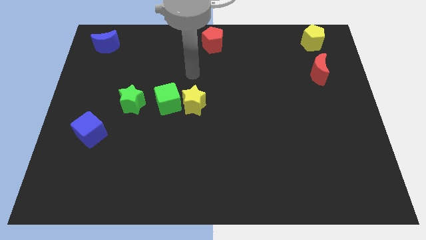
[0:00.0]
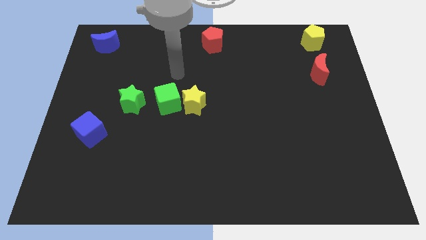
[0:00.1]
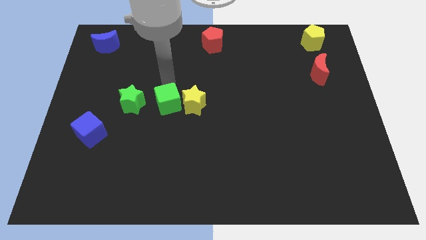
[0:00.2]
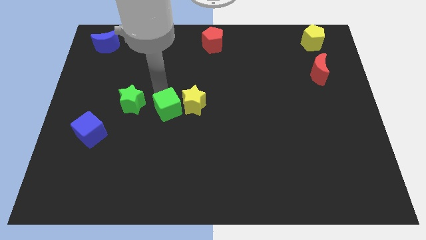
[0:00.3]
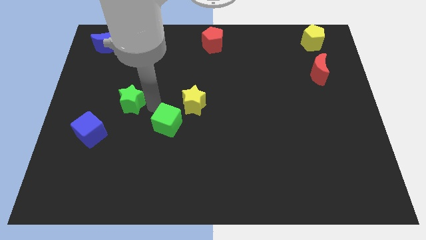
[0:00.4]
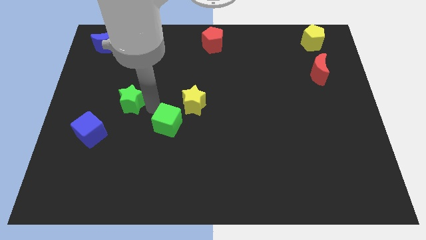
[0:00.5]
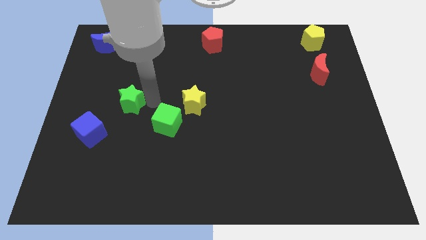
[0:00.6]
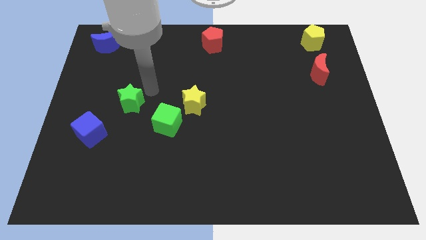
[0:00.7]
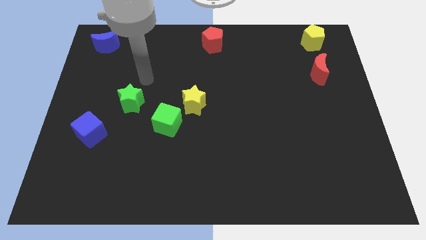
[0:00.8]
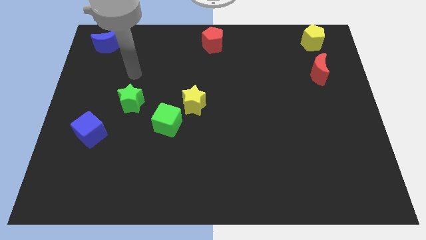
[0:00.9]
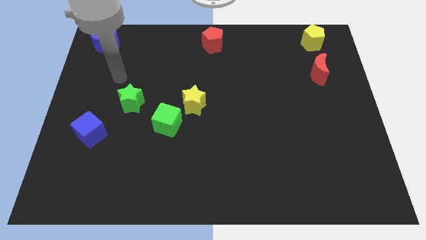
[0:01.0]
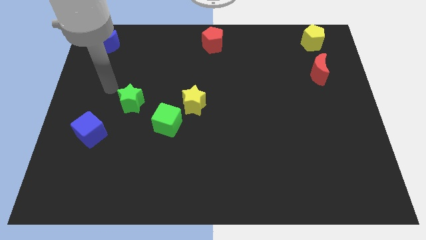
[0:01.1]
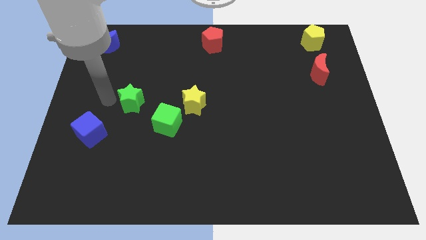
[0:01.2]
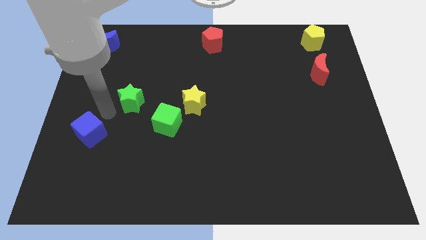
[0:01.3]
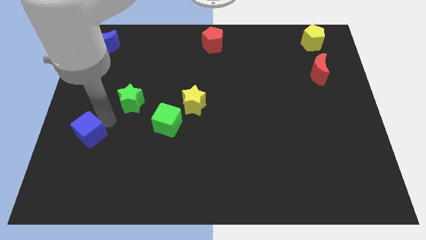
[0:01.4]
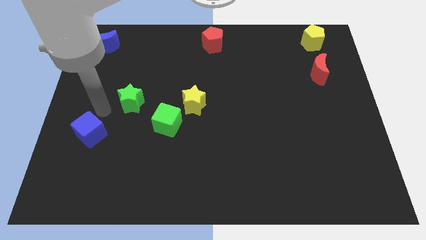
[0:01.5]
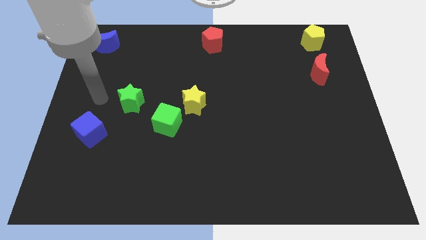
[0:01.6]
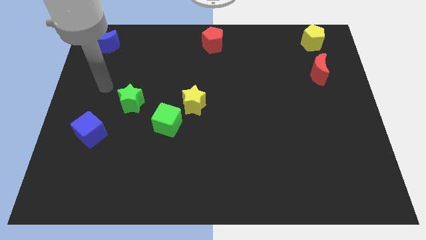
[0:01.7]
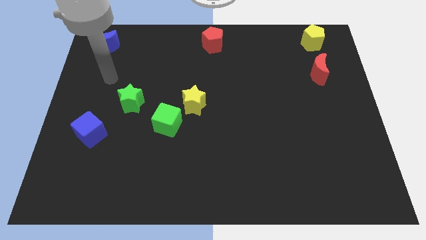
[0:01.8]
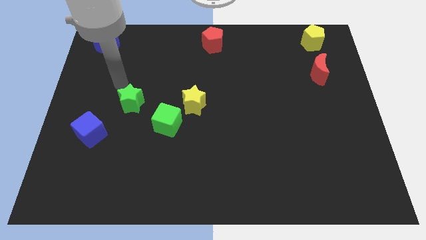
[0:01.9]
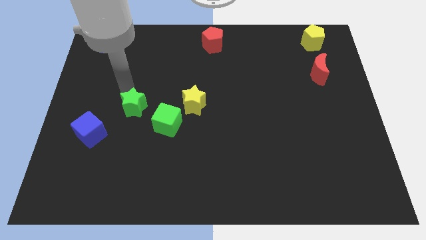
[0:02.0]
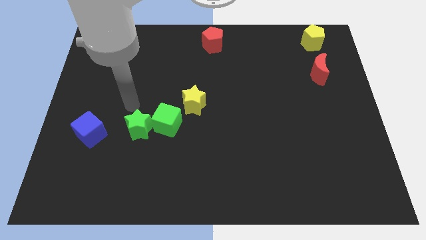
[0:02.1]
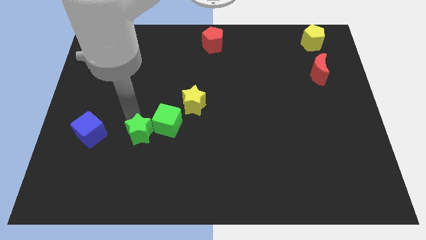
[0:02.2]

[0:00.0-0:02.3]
move the green blocks to the bottom of the board

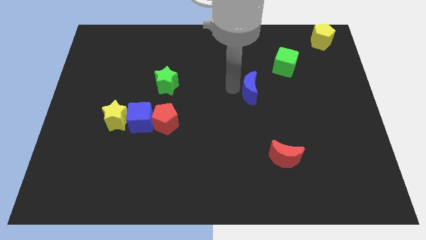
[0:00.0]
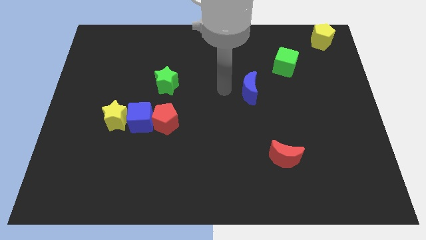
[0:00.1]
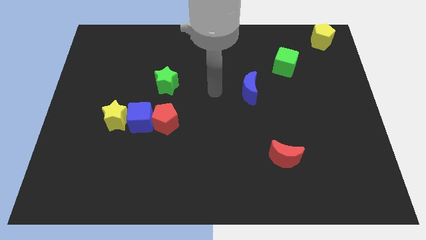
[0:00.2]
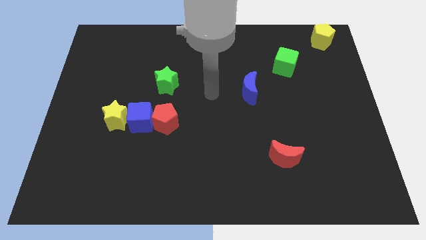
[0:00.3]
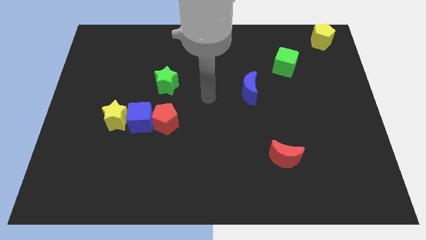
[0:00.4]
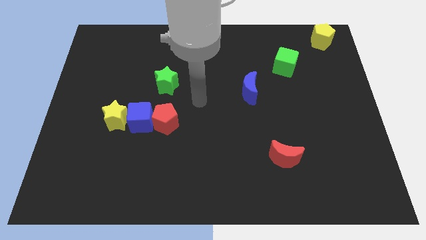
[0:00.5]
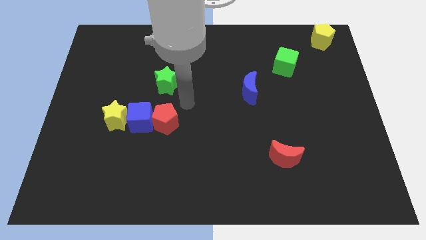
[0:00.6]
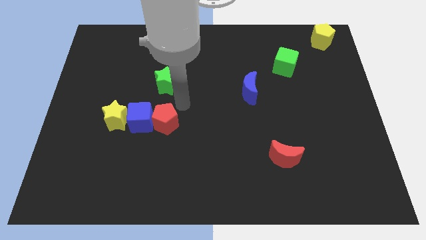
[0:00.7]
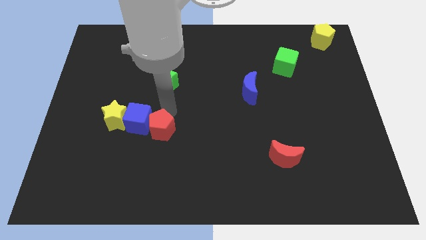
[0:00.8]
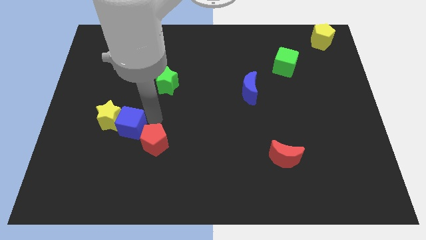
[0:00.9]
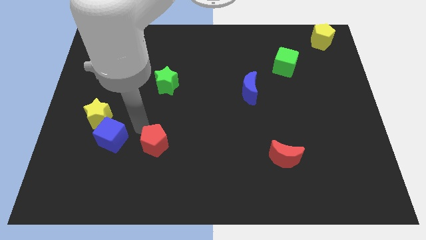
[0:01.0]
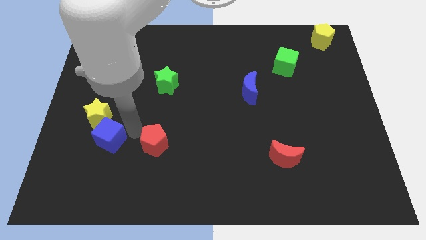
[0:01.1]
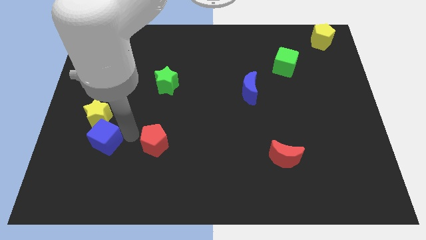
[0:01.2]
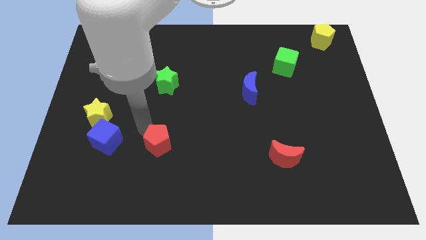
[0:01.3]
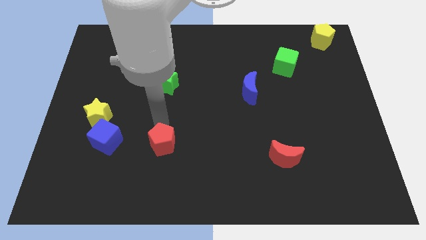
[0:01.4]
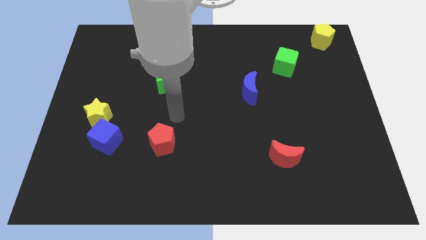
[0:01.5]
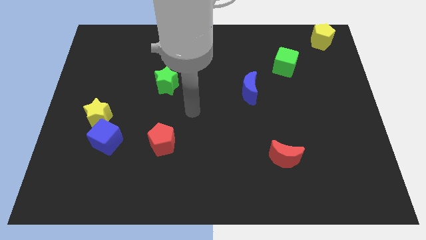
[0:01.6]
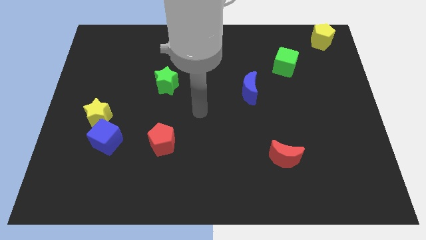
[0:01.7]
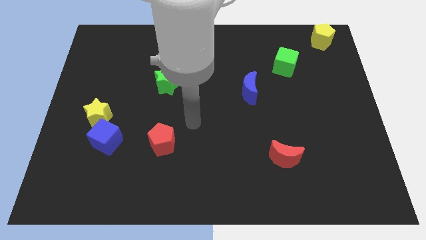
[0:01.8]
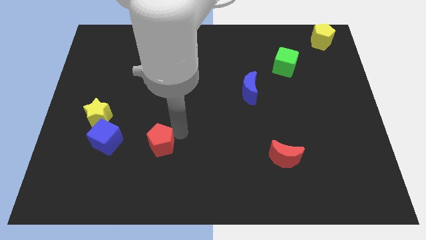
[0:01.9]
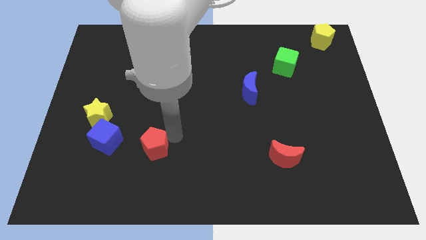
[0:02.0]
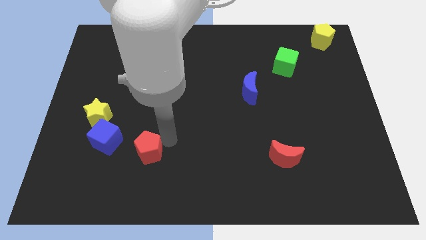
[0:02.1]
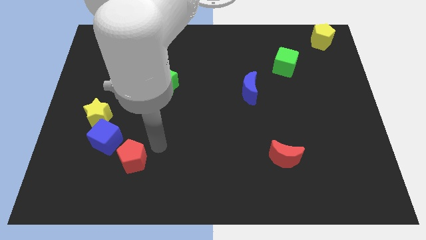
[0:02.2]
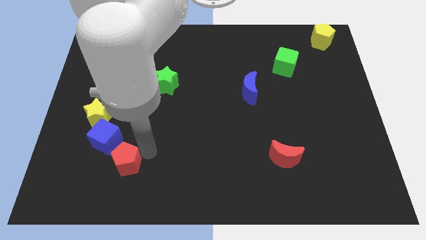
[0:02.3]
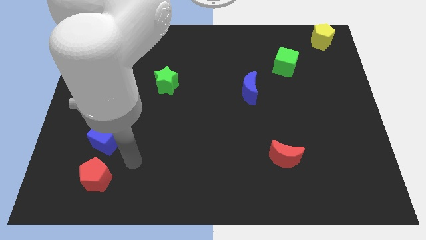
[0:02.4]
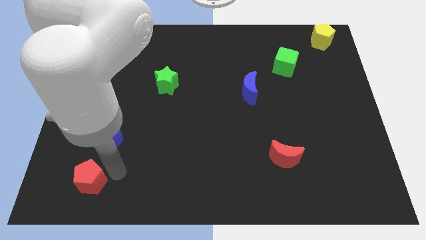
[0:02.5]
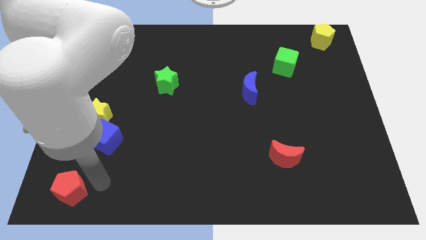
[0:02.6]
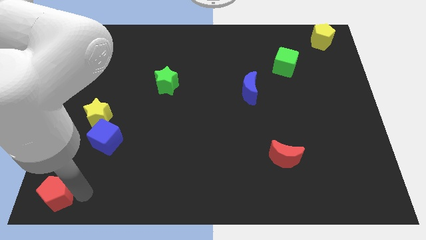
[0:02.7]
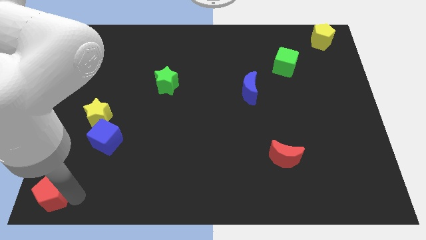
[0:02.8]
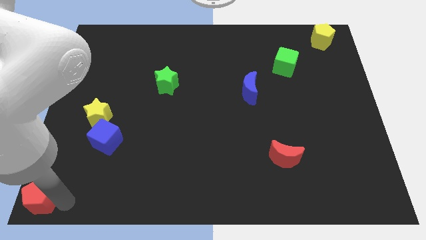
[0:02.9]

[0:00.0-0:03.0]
push red pentagon away from blue block

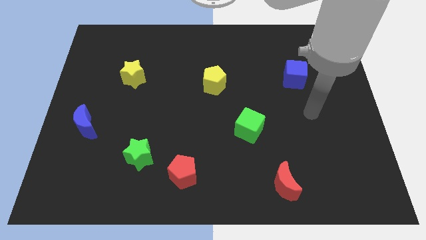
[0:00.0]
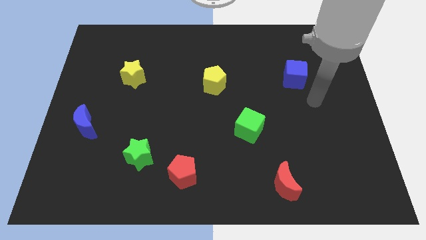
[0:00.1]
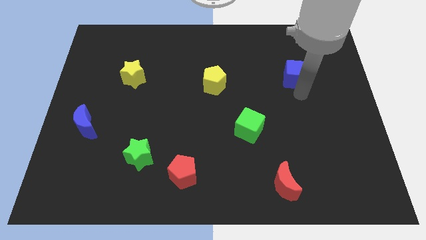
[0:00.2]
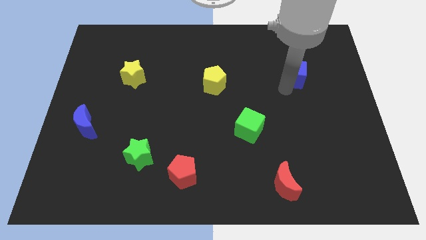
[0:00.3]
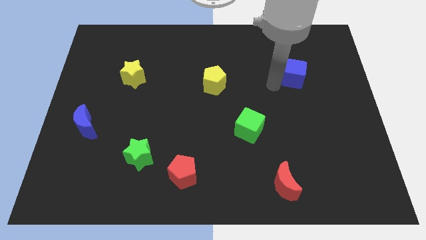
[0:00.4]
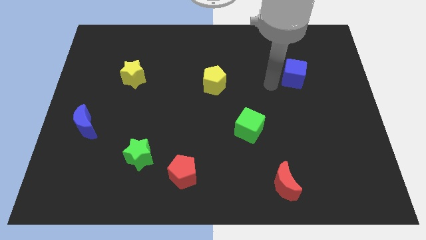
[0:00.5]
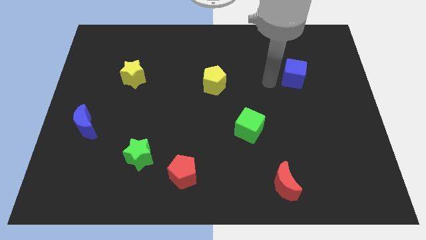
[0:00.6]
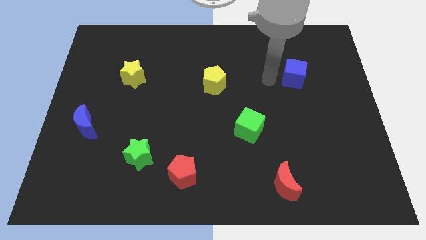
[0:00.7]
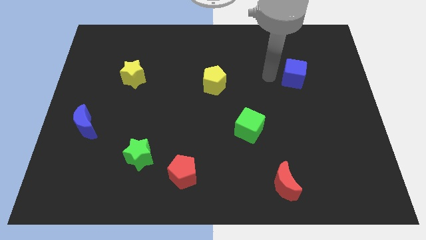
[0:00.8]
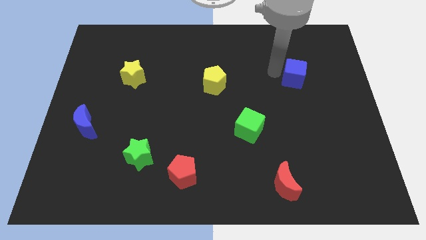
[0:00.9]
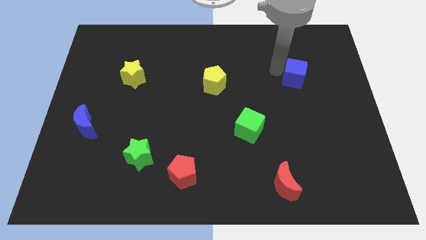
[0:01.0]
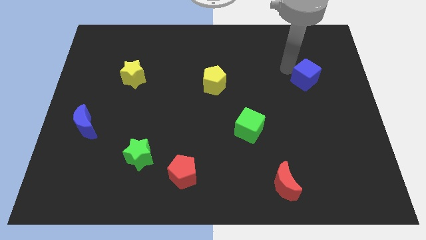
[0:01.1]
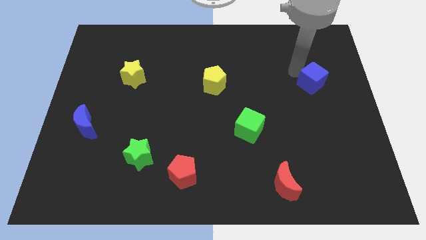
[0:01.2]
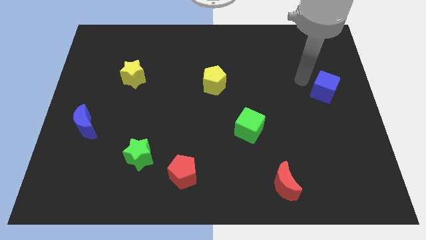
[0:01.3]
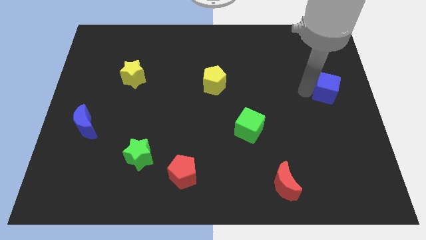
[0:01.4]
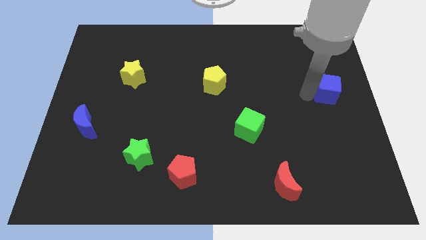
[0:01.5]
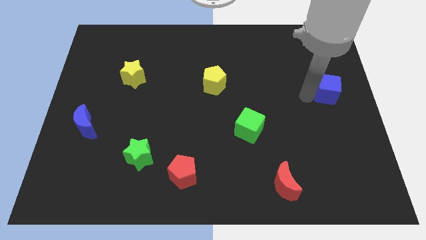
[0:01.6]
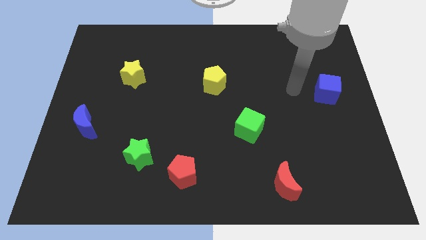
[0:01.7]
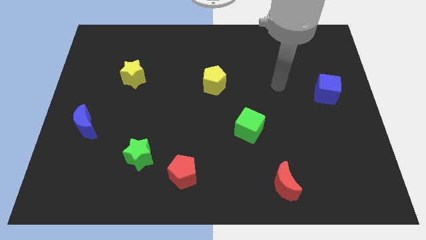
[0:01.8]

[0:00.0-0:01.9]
move the blue cube diagonally on the top right side of the green cube

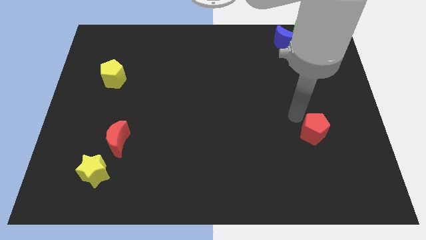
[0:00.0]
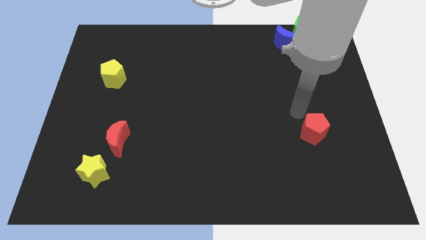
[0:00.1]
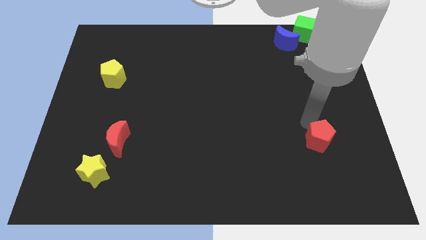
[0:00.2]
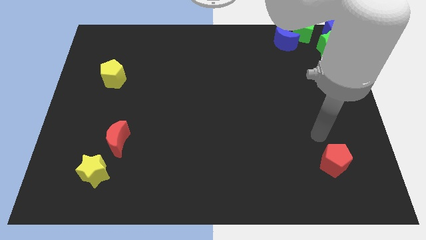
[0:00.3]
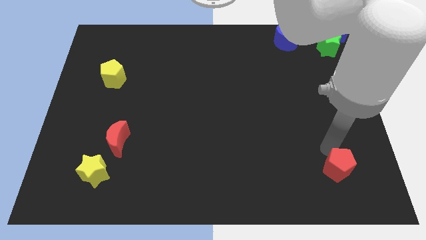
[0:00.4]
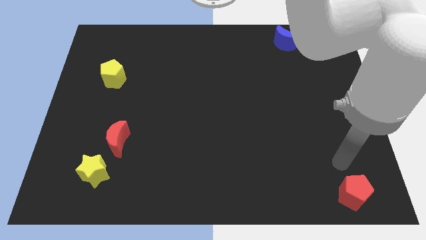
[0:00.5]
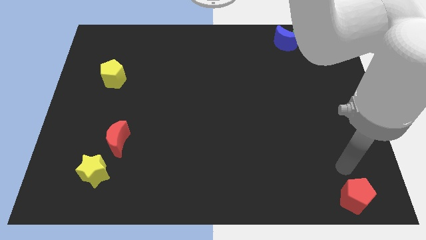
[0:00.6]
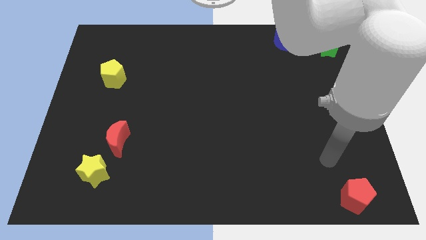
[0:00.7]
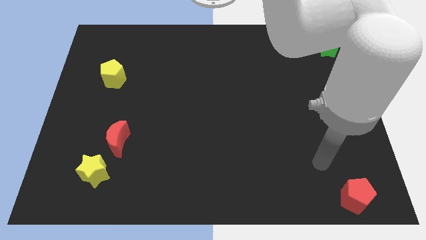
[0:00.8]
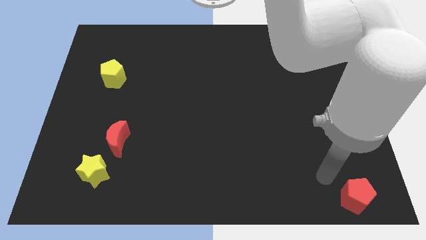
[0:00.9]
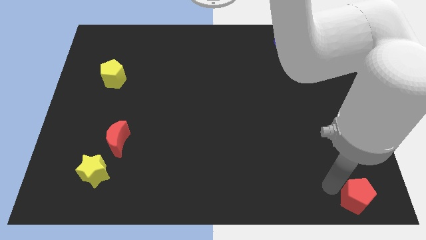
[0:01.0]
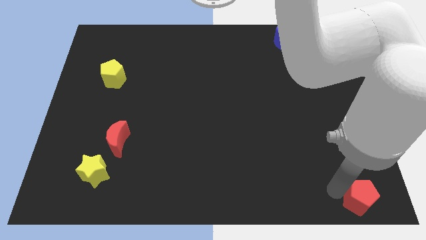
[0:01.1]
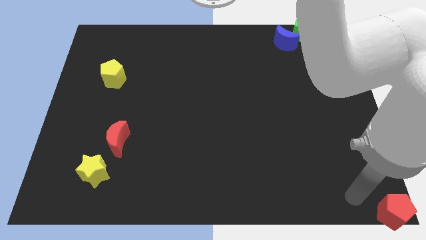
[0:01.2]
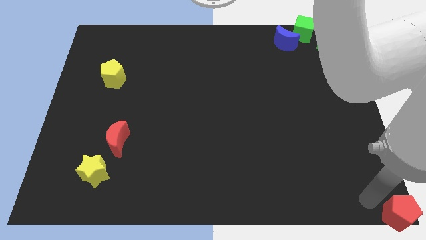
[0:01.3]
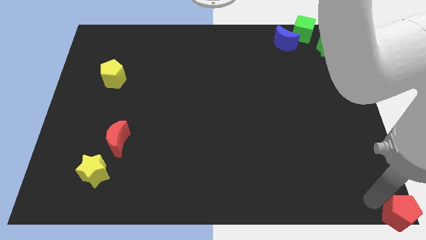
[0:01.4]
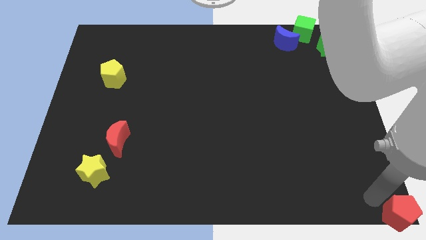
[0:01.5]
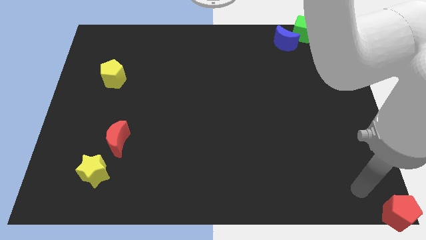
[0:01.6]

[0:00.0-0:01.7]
push the red pentagon to the bottom right
